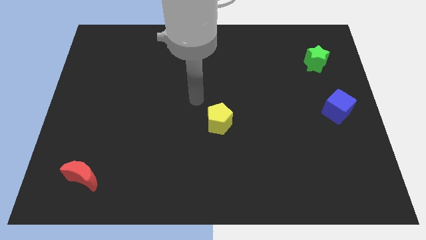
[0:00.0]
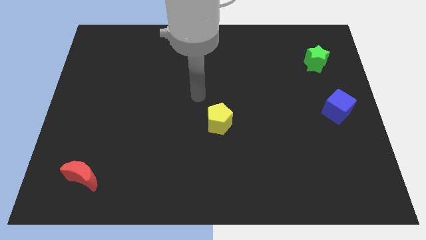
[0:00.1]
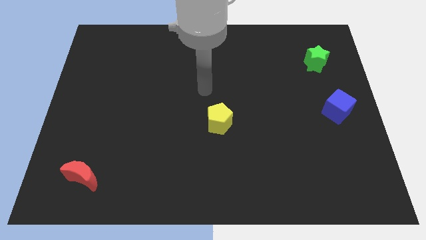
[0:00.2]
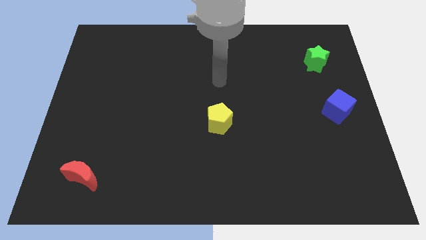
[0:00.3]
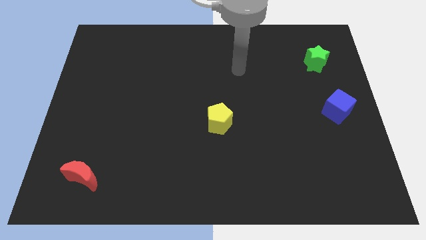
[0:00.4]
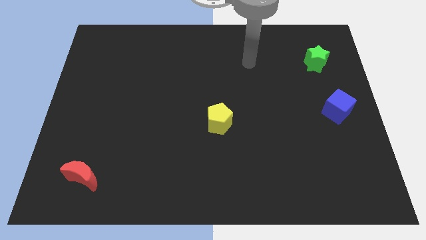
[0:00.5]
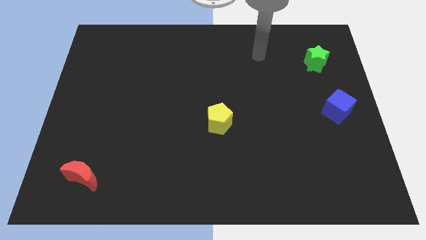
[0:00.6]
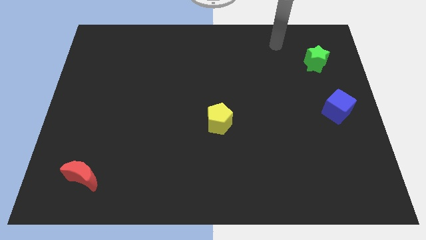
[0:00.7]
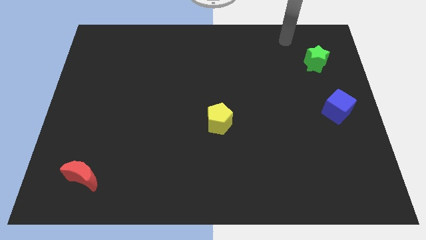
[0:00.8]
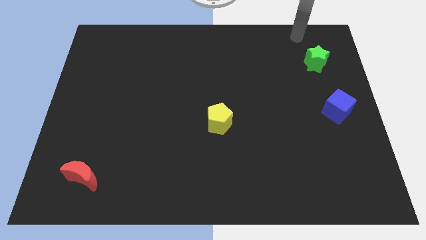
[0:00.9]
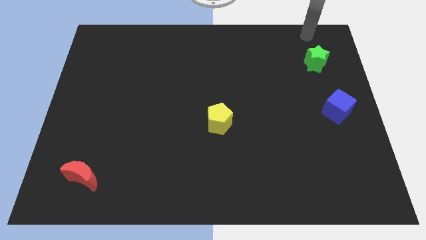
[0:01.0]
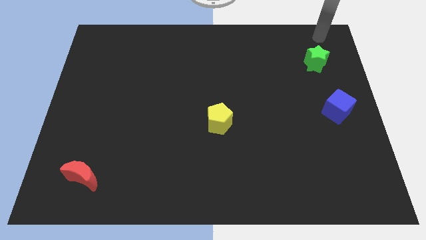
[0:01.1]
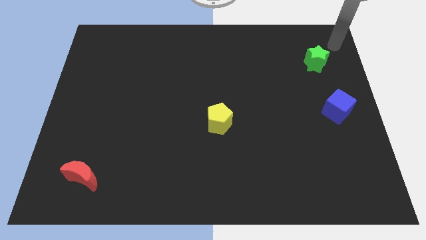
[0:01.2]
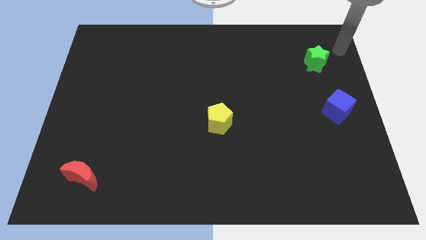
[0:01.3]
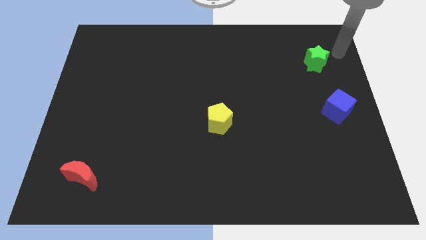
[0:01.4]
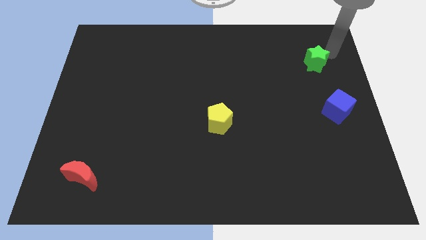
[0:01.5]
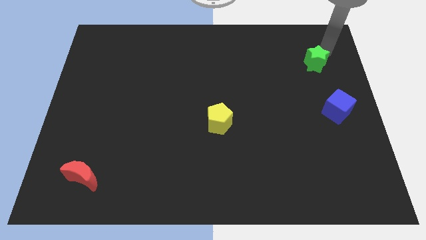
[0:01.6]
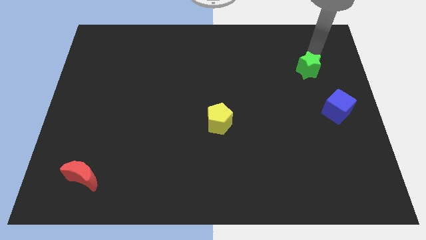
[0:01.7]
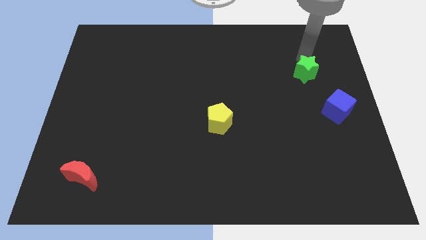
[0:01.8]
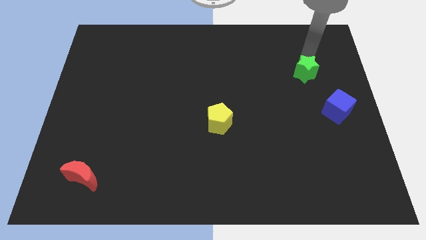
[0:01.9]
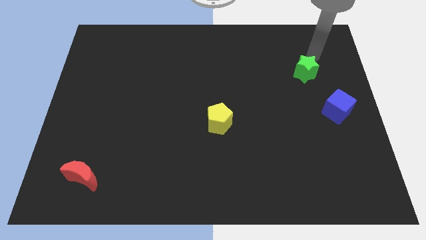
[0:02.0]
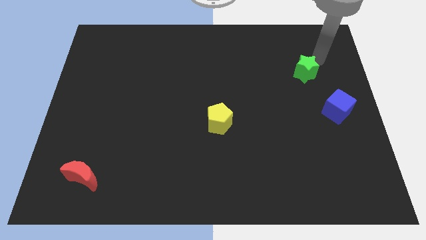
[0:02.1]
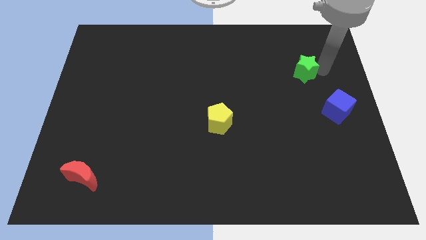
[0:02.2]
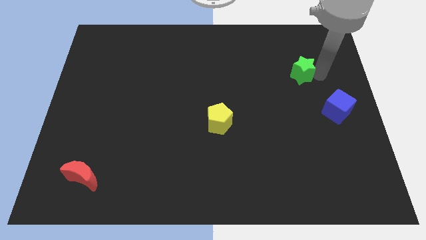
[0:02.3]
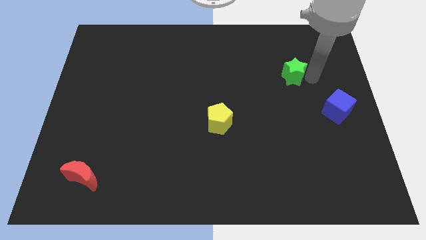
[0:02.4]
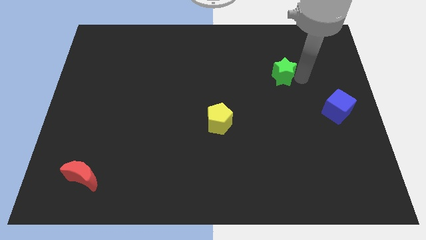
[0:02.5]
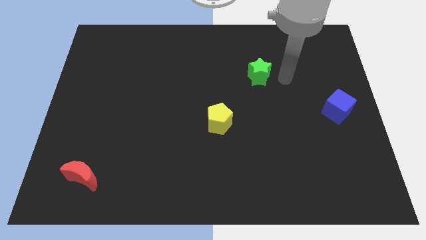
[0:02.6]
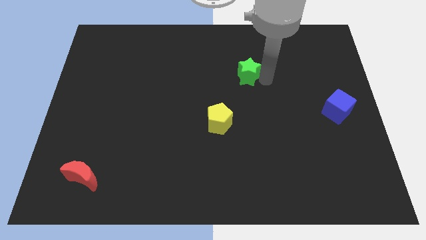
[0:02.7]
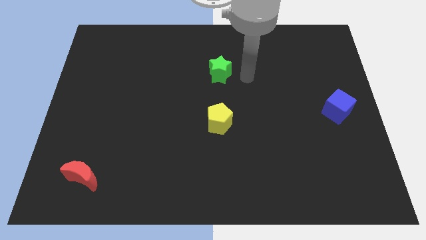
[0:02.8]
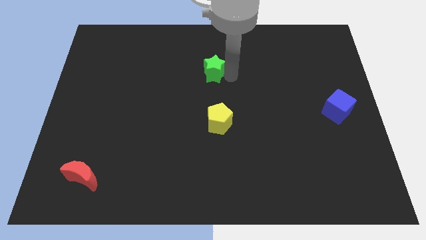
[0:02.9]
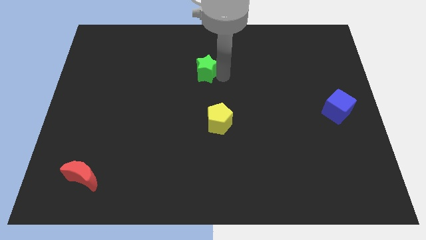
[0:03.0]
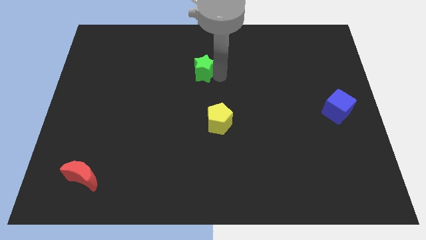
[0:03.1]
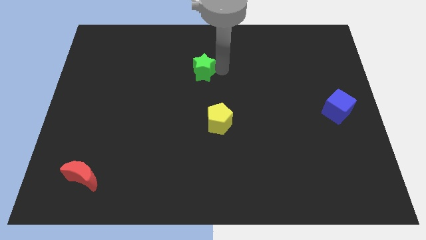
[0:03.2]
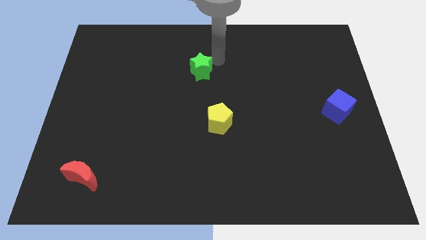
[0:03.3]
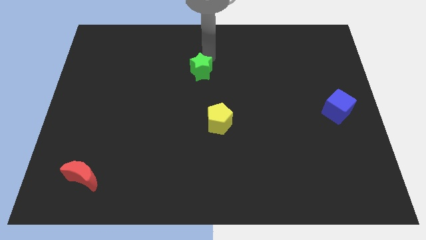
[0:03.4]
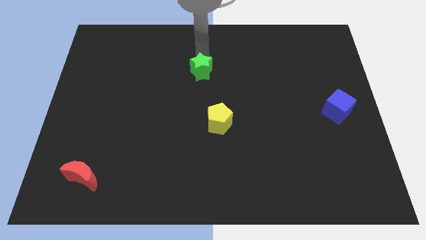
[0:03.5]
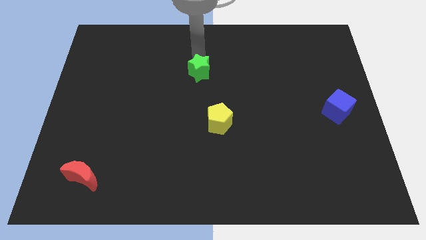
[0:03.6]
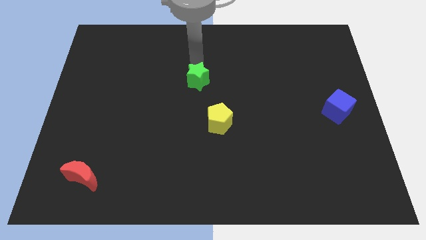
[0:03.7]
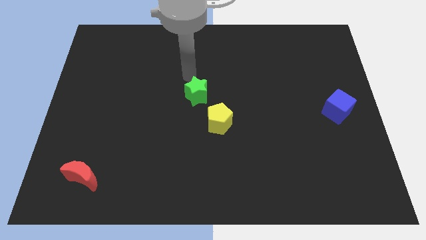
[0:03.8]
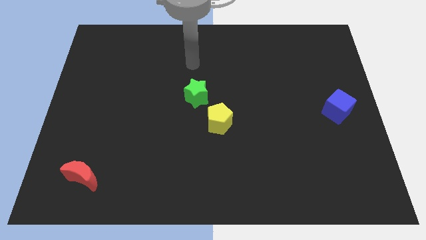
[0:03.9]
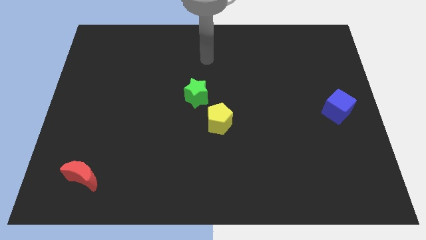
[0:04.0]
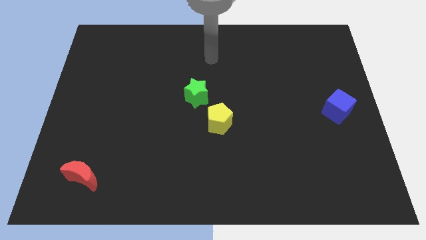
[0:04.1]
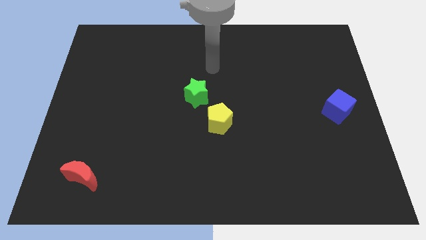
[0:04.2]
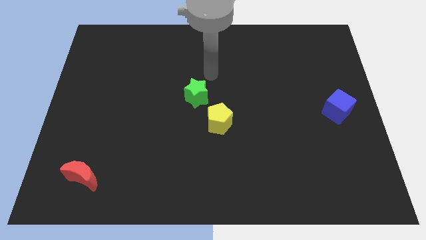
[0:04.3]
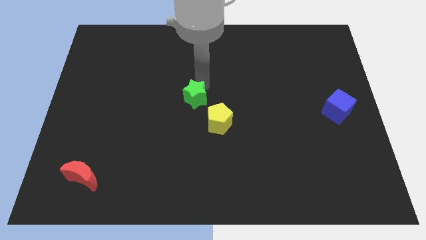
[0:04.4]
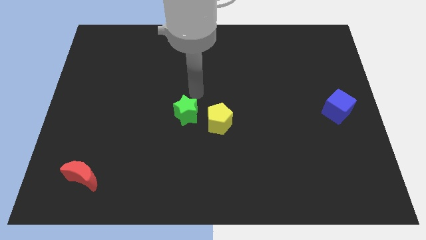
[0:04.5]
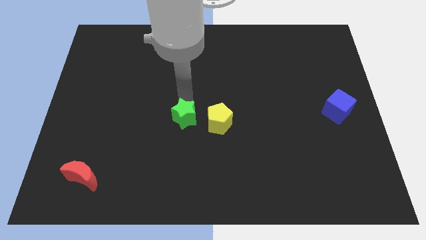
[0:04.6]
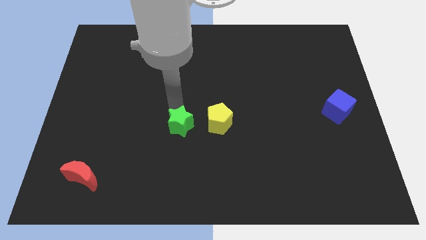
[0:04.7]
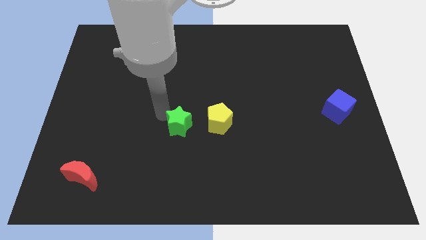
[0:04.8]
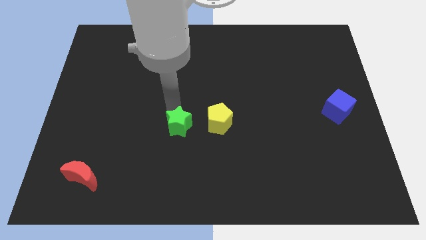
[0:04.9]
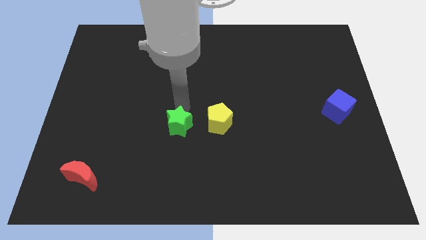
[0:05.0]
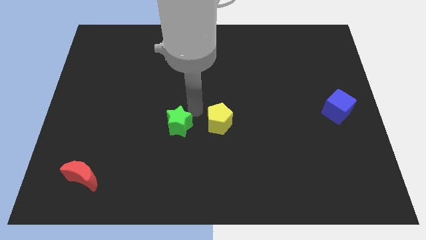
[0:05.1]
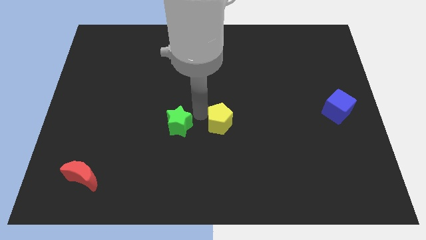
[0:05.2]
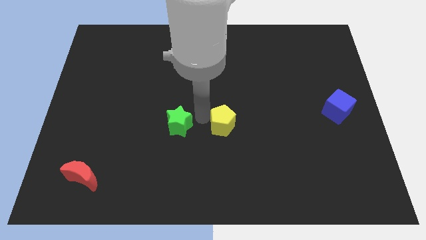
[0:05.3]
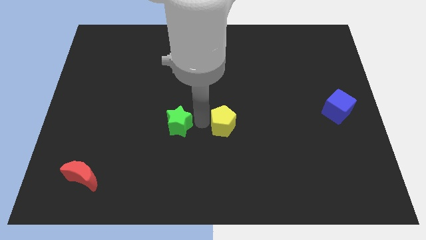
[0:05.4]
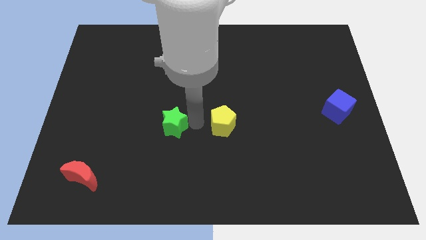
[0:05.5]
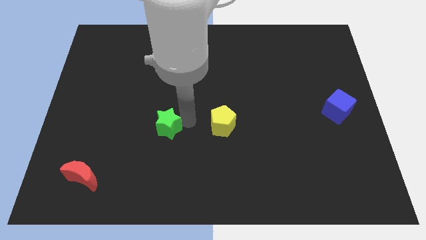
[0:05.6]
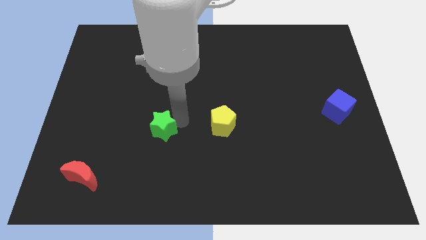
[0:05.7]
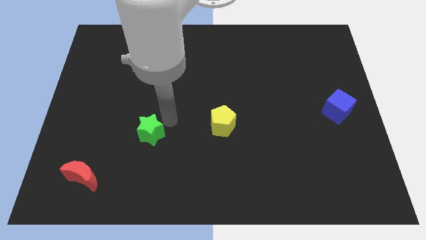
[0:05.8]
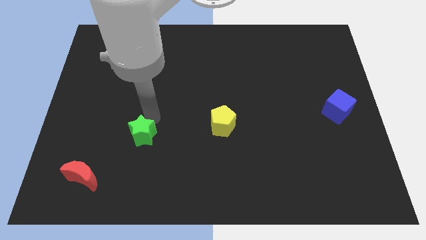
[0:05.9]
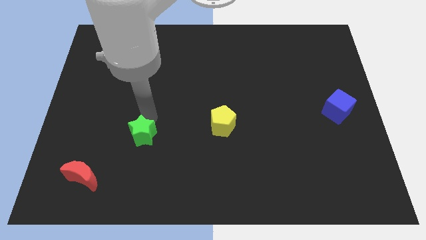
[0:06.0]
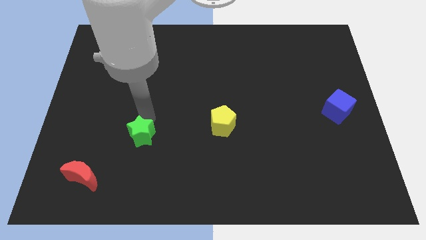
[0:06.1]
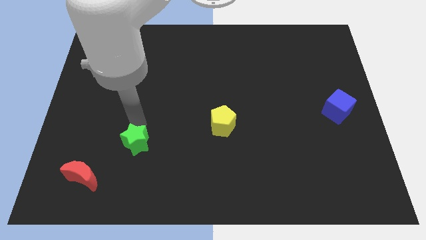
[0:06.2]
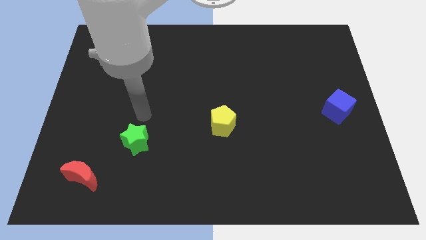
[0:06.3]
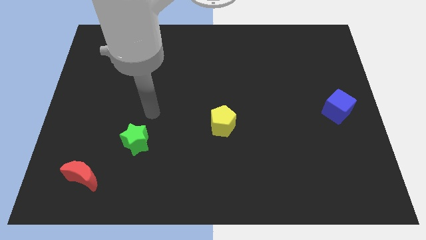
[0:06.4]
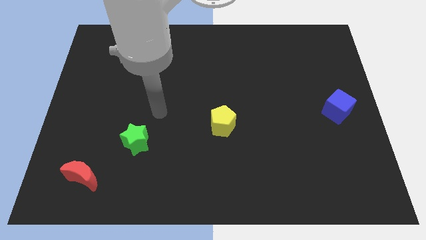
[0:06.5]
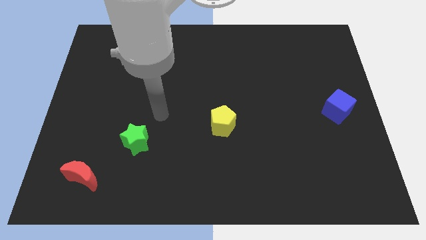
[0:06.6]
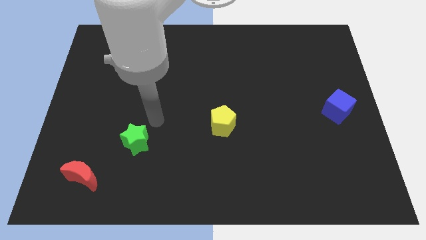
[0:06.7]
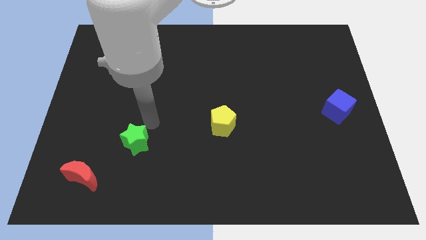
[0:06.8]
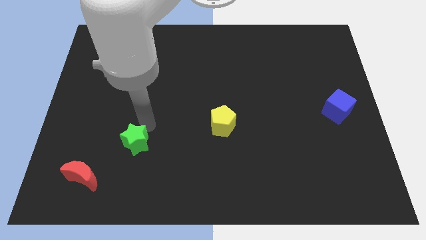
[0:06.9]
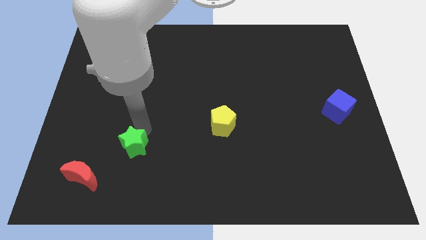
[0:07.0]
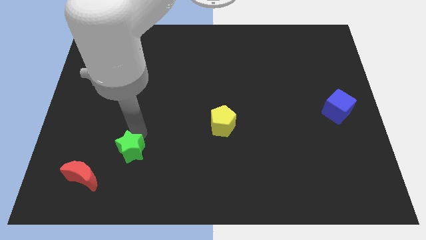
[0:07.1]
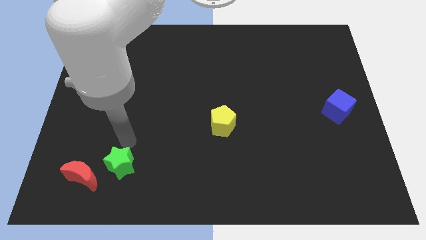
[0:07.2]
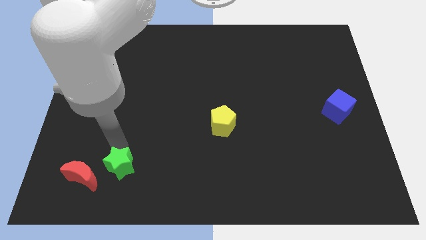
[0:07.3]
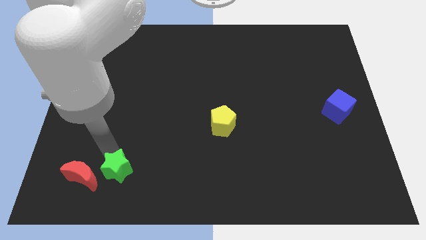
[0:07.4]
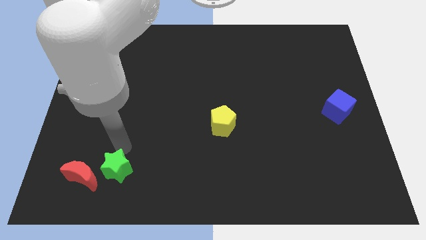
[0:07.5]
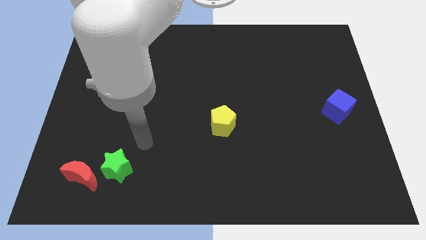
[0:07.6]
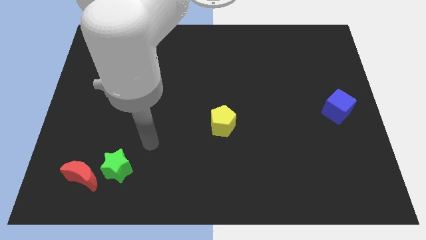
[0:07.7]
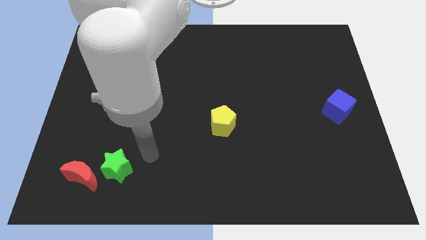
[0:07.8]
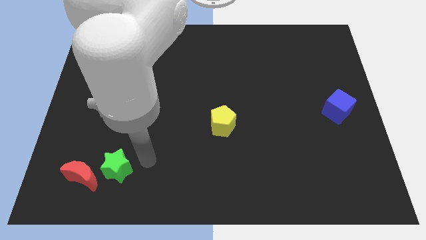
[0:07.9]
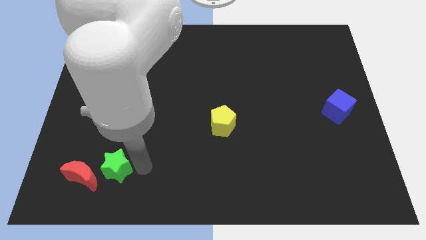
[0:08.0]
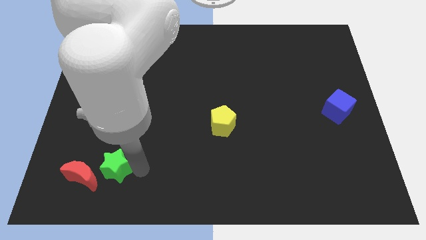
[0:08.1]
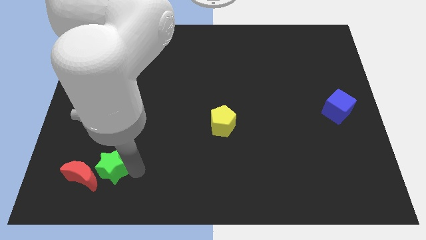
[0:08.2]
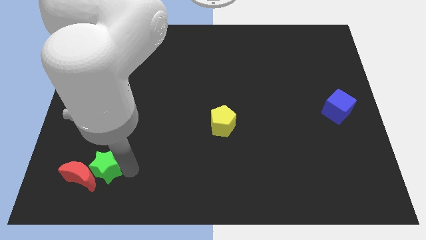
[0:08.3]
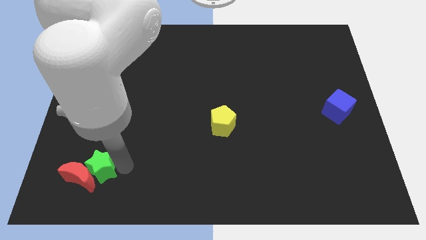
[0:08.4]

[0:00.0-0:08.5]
move the green star towards the moon

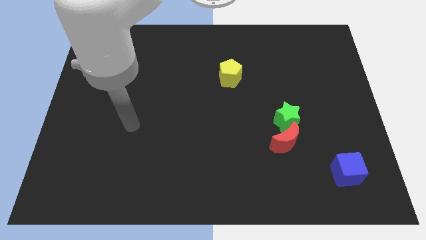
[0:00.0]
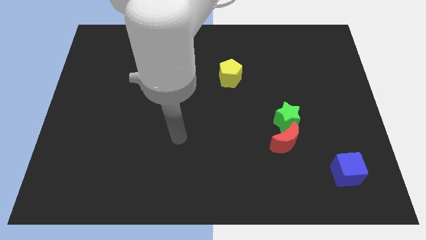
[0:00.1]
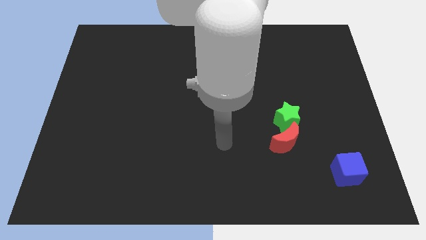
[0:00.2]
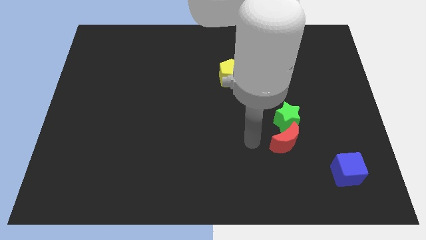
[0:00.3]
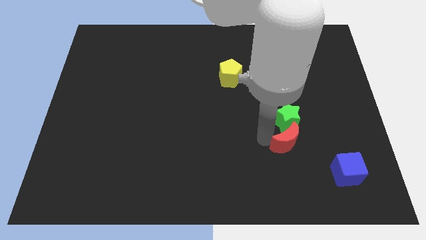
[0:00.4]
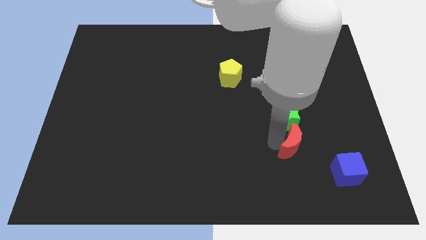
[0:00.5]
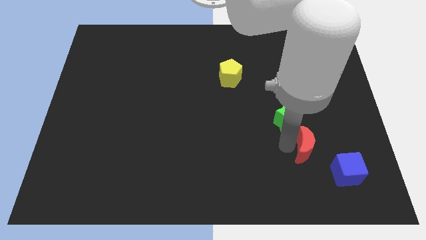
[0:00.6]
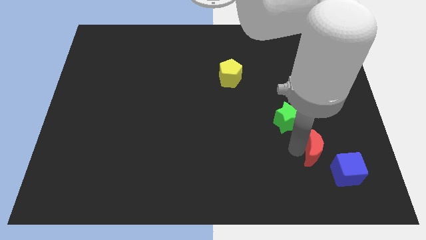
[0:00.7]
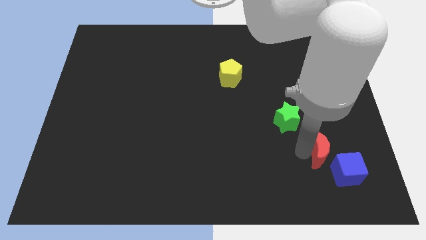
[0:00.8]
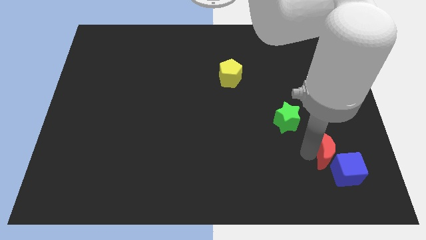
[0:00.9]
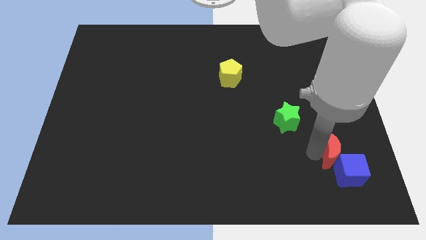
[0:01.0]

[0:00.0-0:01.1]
push the red moon towards the blue block
